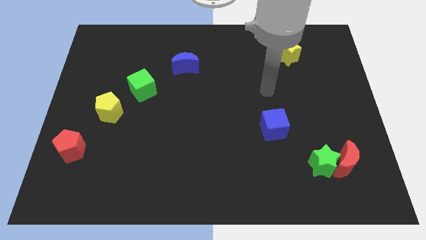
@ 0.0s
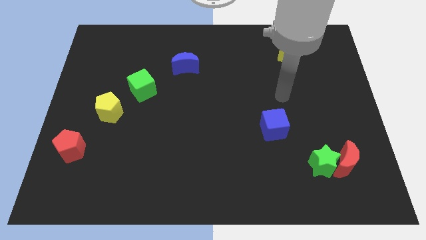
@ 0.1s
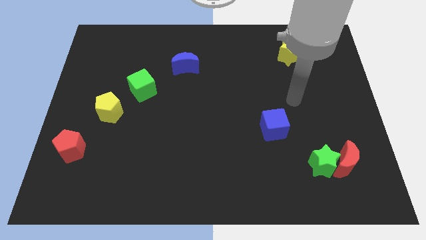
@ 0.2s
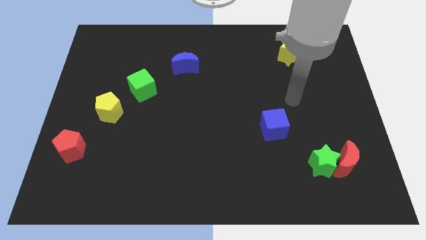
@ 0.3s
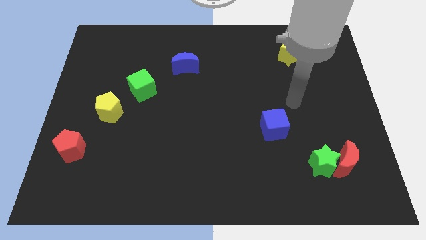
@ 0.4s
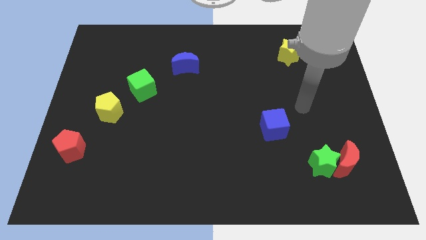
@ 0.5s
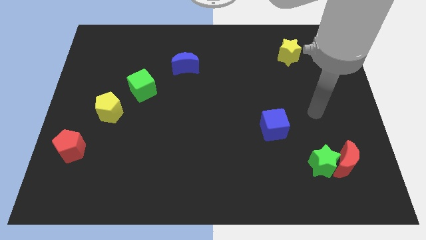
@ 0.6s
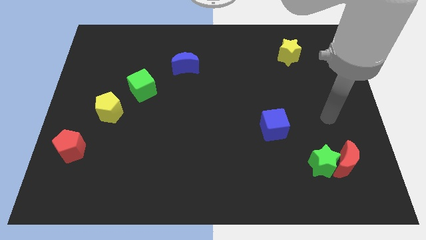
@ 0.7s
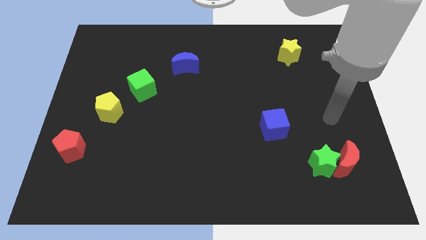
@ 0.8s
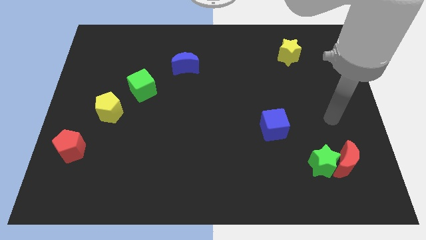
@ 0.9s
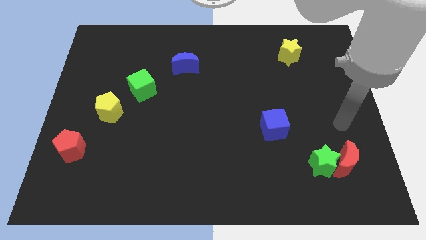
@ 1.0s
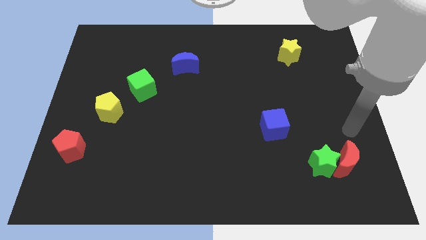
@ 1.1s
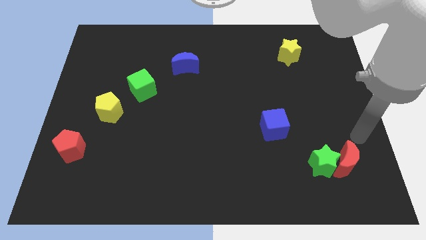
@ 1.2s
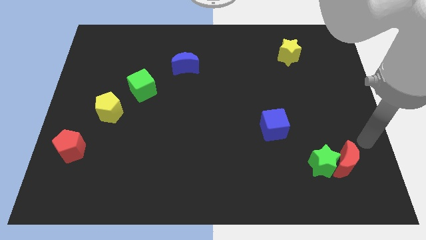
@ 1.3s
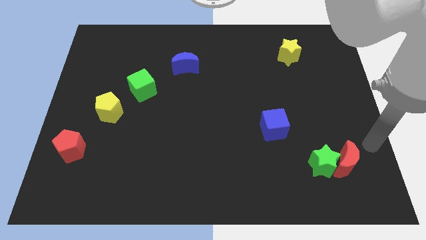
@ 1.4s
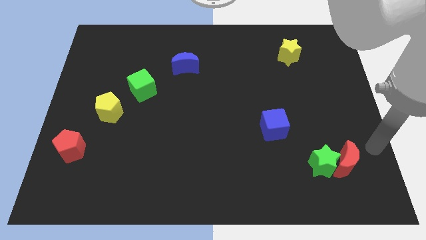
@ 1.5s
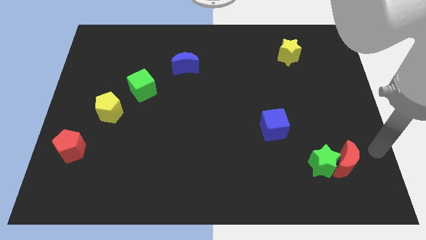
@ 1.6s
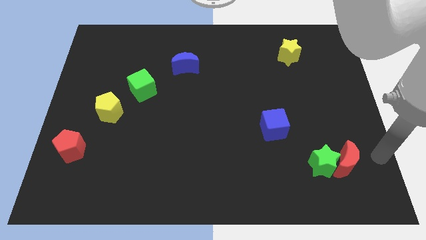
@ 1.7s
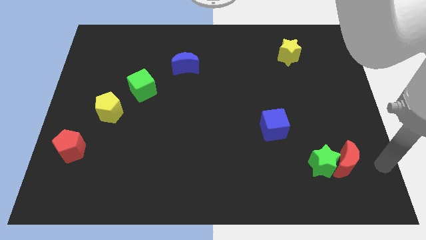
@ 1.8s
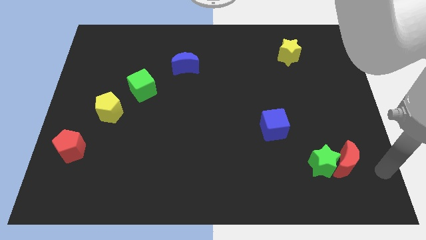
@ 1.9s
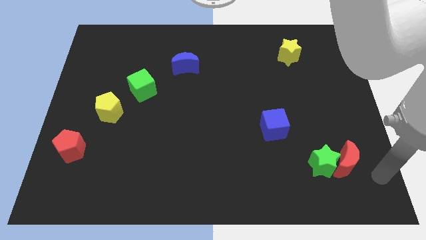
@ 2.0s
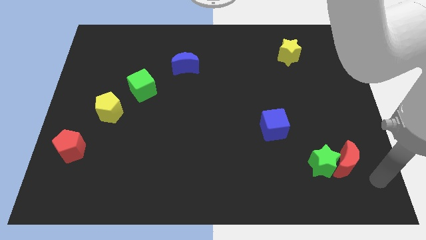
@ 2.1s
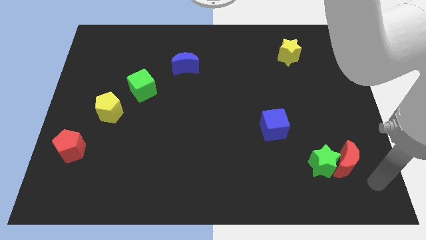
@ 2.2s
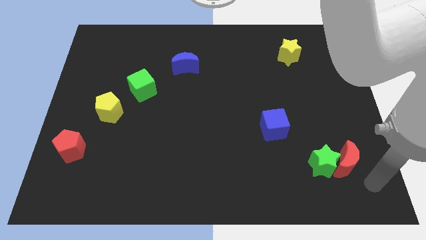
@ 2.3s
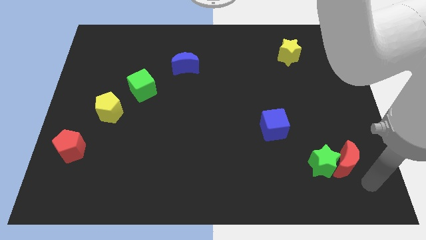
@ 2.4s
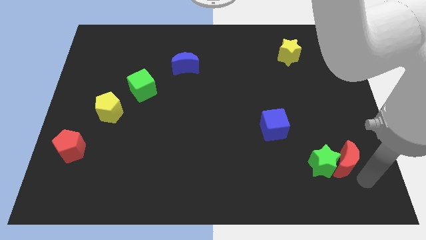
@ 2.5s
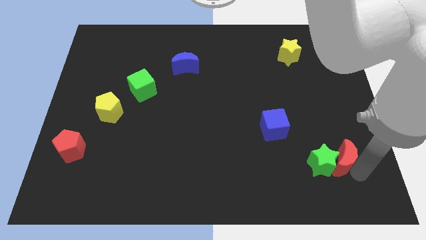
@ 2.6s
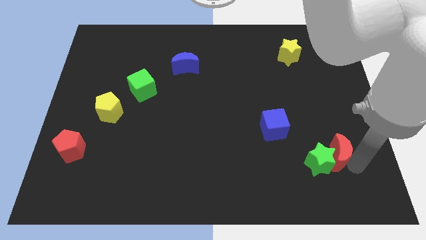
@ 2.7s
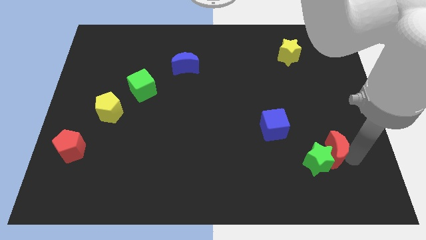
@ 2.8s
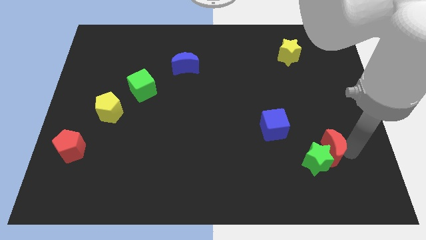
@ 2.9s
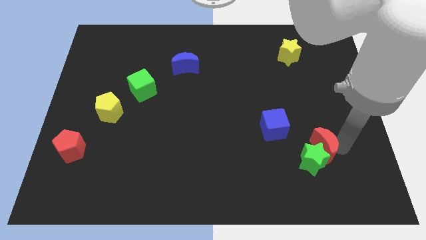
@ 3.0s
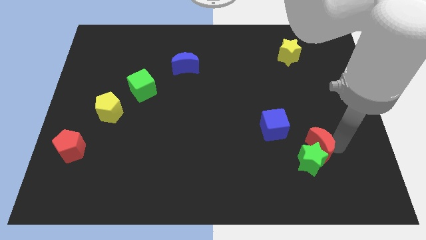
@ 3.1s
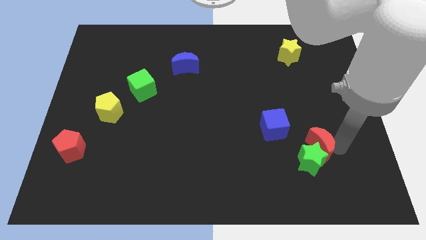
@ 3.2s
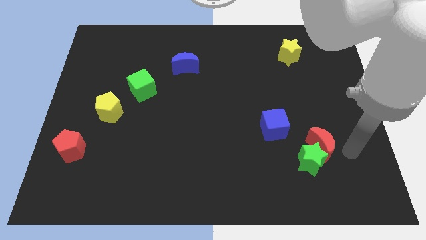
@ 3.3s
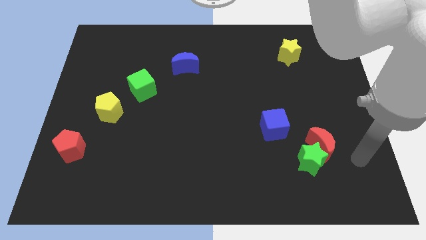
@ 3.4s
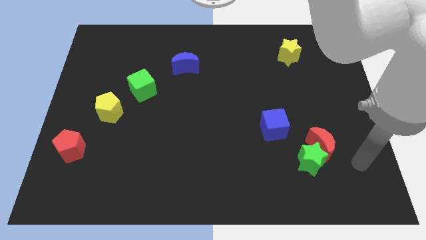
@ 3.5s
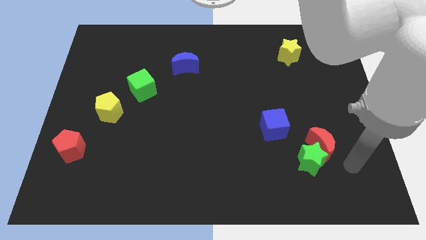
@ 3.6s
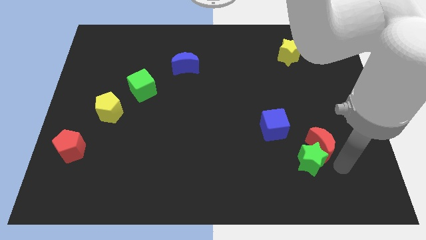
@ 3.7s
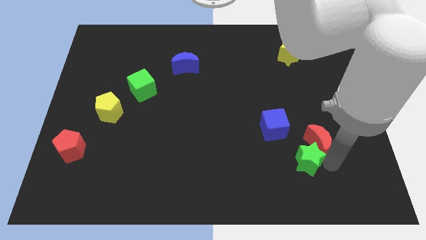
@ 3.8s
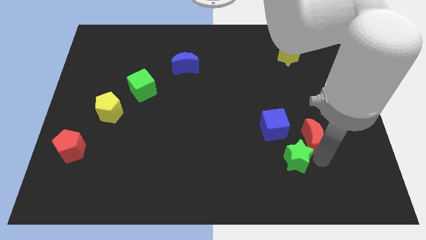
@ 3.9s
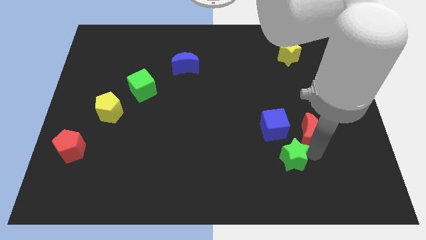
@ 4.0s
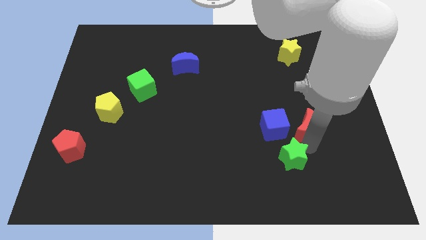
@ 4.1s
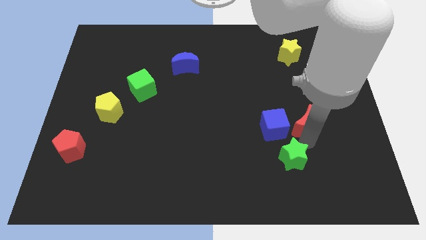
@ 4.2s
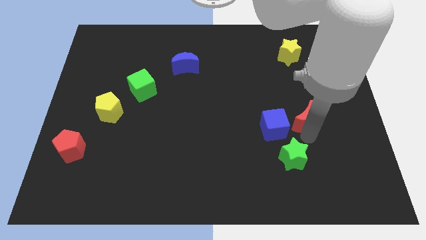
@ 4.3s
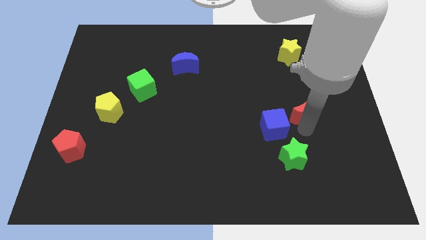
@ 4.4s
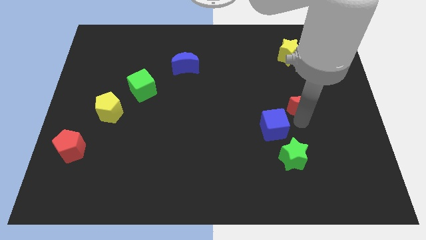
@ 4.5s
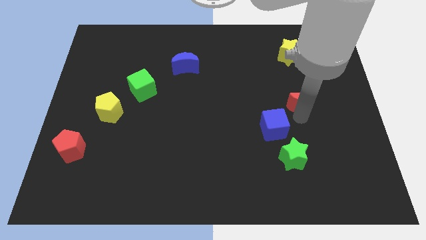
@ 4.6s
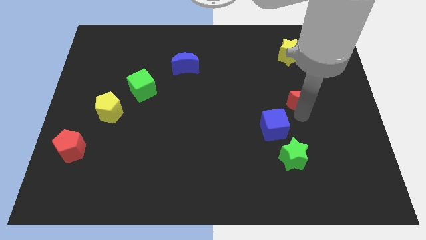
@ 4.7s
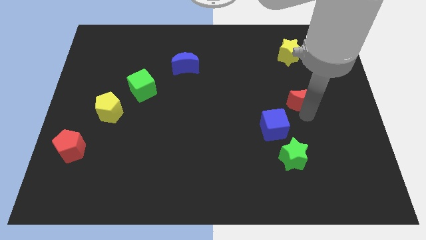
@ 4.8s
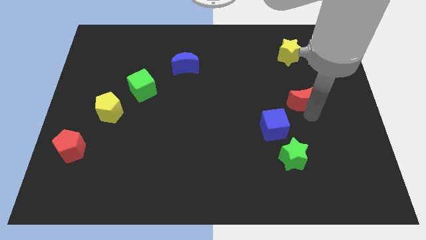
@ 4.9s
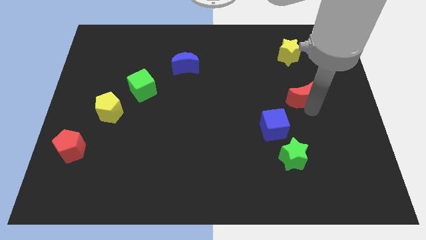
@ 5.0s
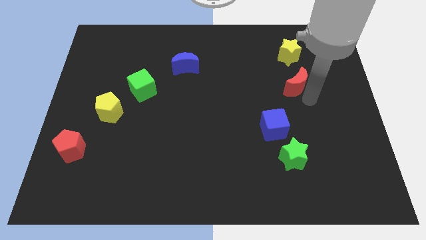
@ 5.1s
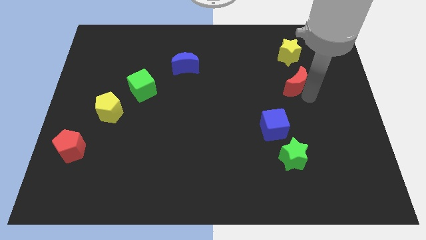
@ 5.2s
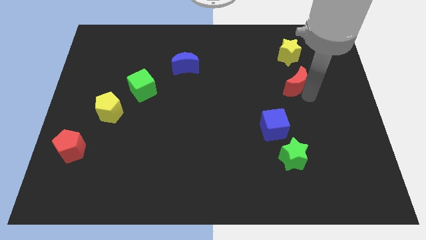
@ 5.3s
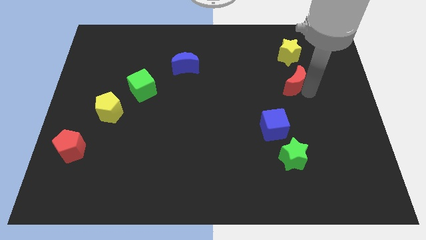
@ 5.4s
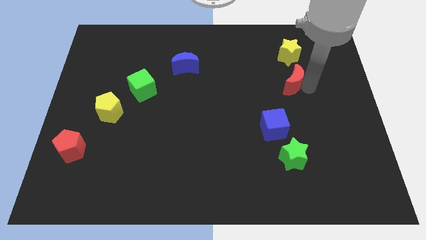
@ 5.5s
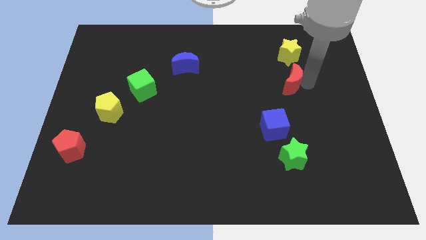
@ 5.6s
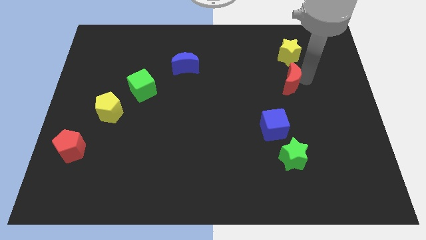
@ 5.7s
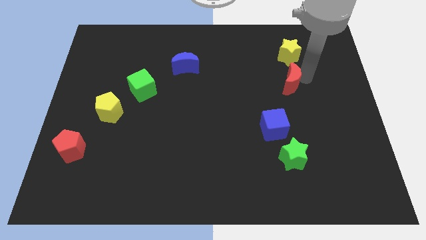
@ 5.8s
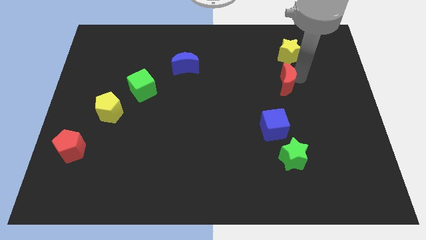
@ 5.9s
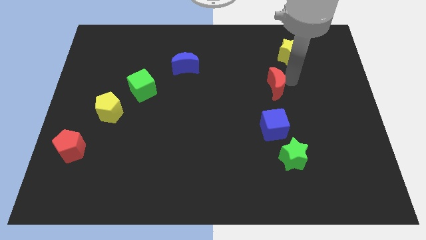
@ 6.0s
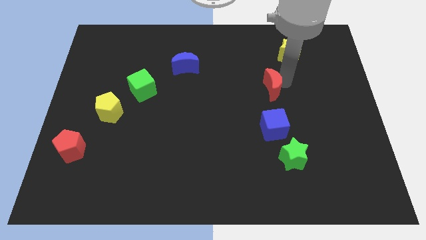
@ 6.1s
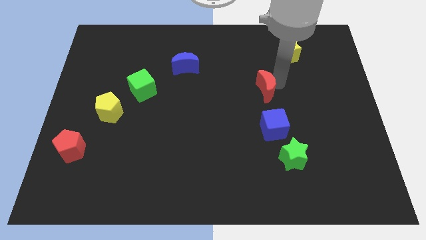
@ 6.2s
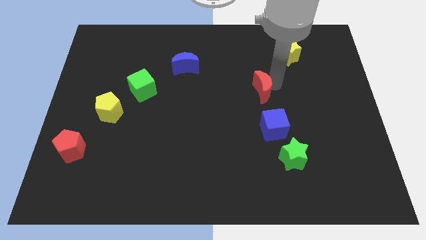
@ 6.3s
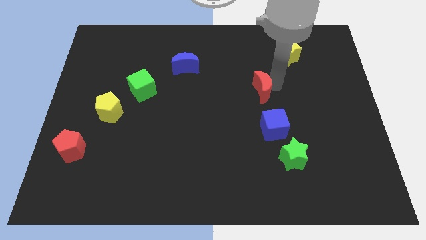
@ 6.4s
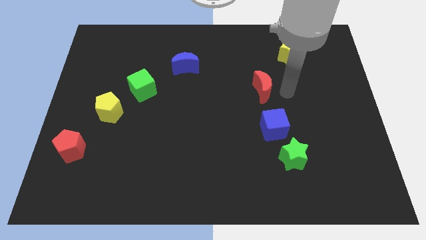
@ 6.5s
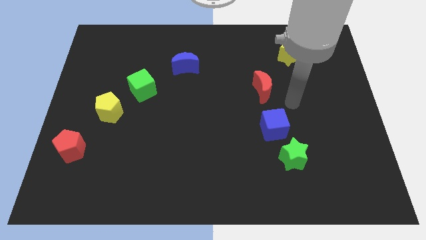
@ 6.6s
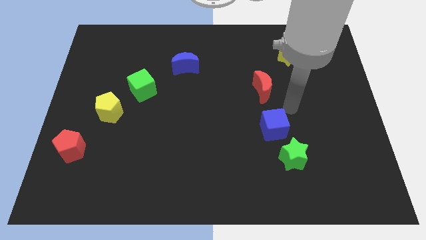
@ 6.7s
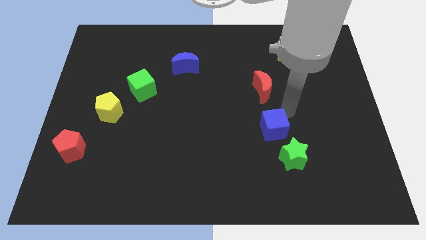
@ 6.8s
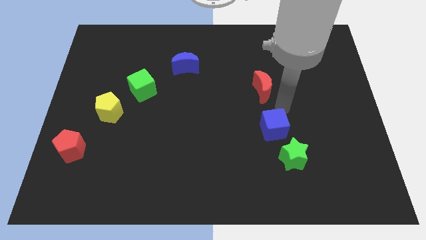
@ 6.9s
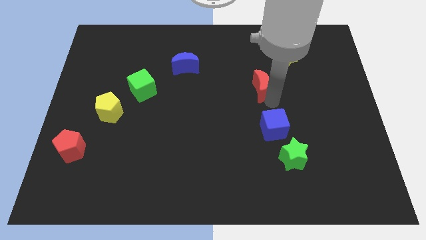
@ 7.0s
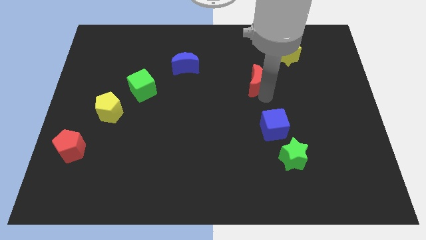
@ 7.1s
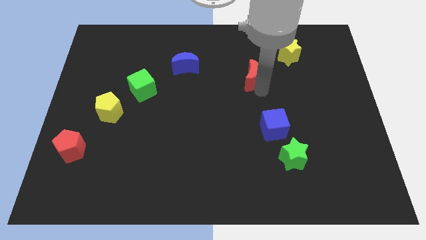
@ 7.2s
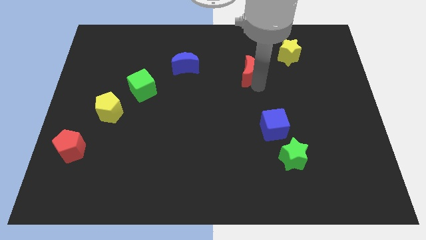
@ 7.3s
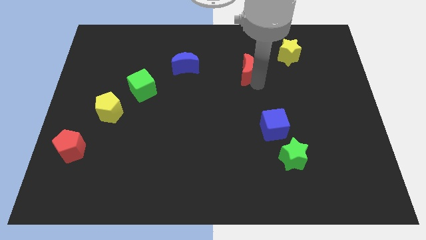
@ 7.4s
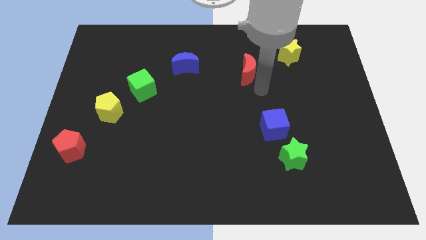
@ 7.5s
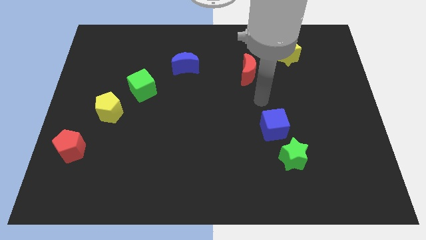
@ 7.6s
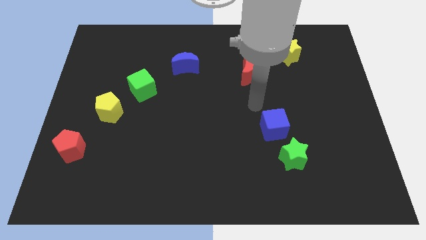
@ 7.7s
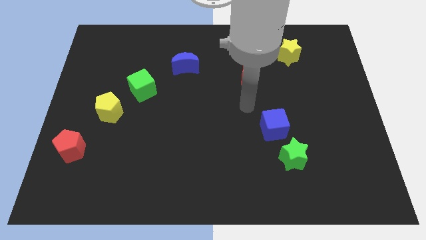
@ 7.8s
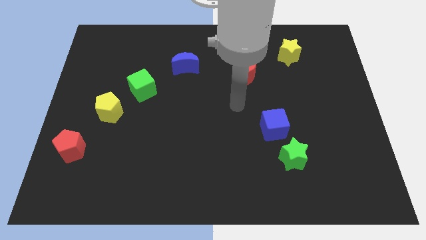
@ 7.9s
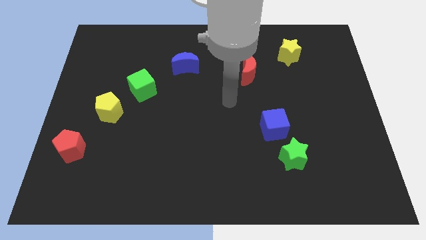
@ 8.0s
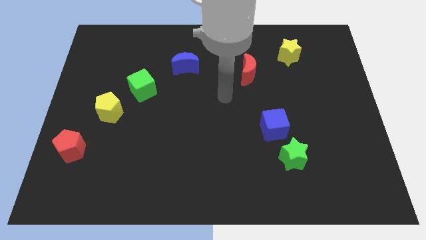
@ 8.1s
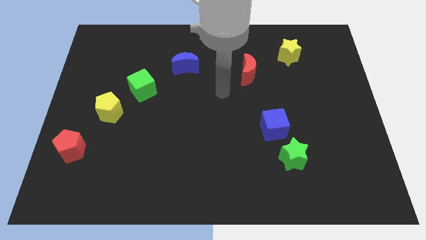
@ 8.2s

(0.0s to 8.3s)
separate red moon from green star

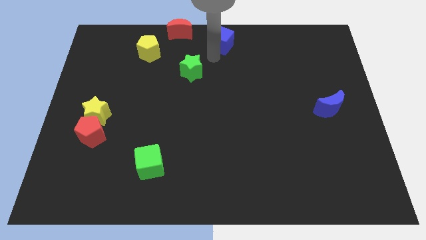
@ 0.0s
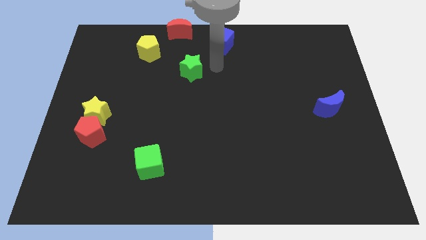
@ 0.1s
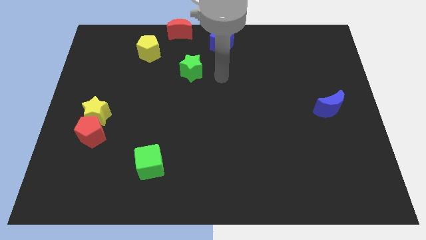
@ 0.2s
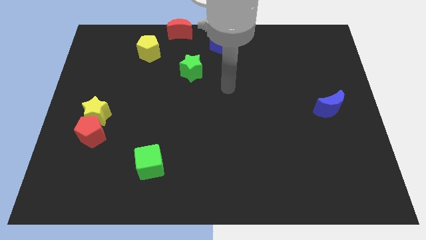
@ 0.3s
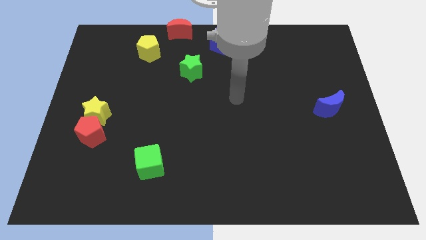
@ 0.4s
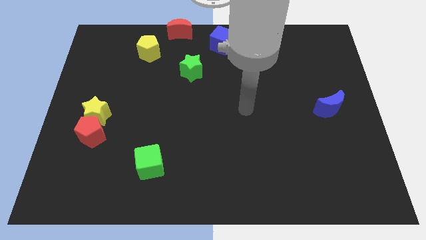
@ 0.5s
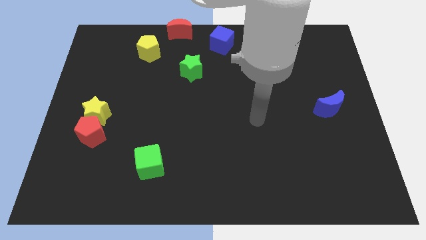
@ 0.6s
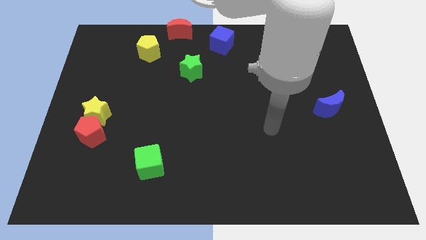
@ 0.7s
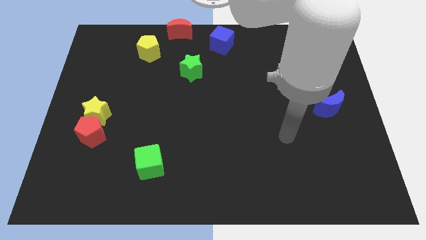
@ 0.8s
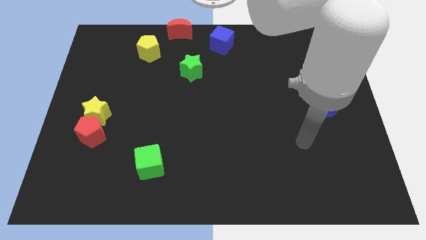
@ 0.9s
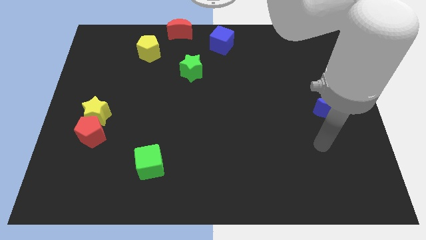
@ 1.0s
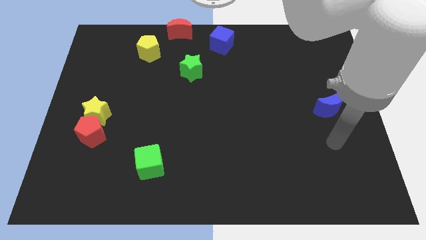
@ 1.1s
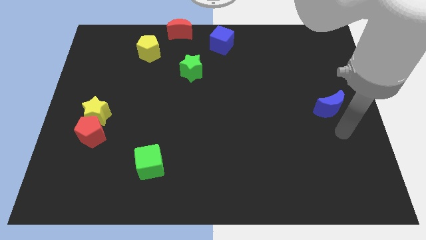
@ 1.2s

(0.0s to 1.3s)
move your arm away from the blue cube
